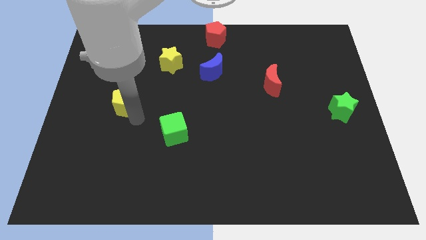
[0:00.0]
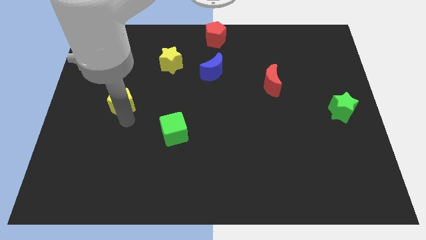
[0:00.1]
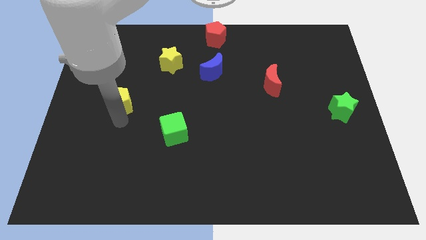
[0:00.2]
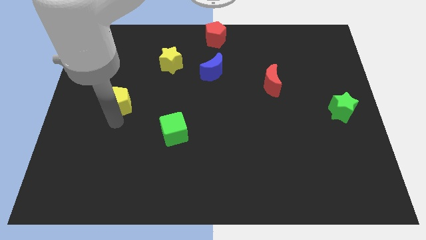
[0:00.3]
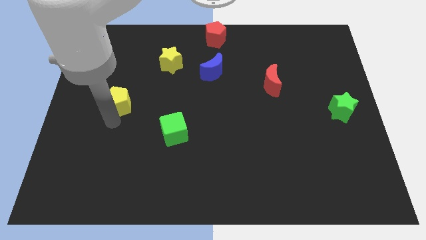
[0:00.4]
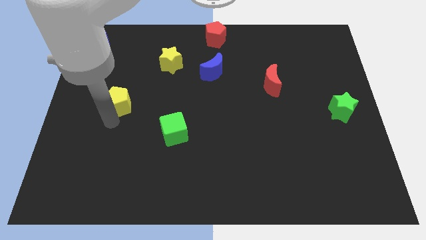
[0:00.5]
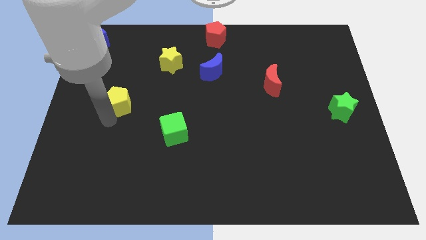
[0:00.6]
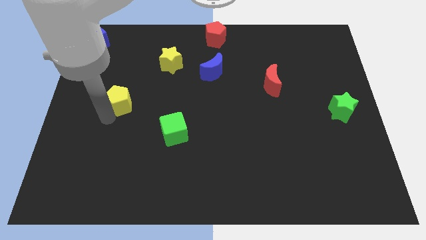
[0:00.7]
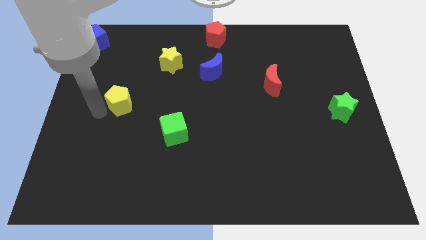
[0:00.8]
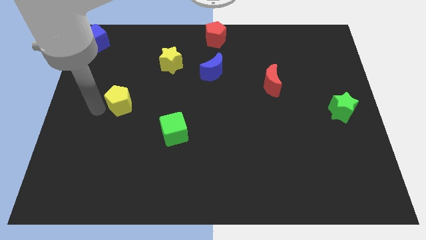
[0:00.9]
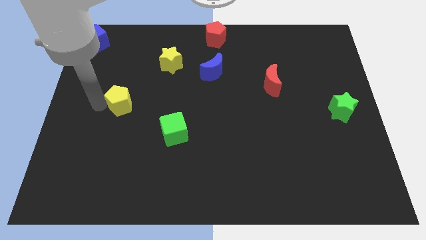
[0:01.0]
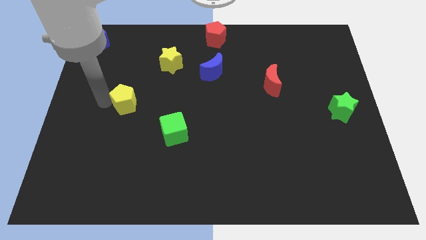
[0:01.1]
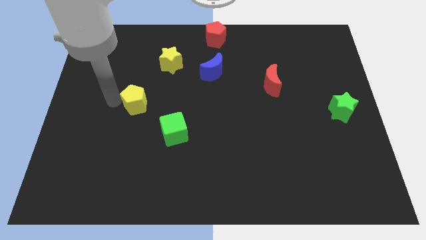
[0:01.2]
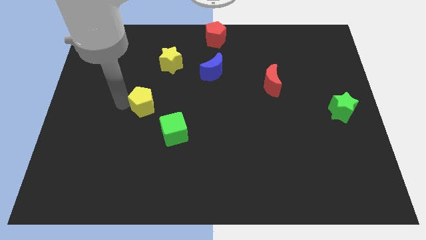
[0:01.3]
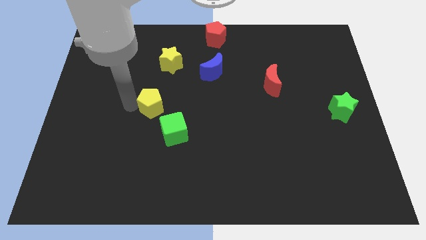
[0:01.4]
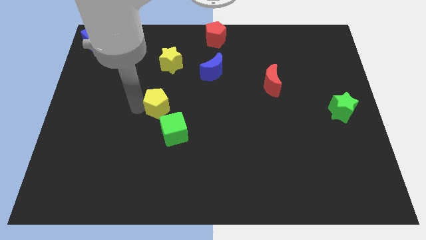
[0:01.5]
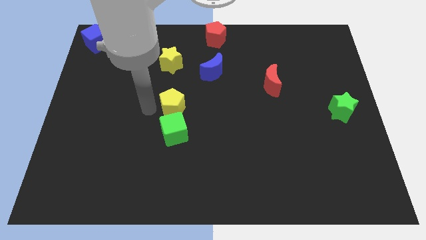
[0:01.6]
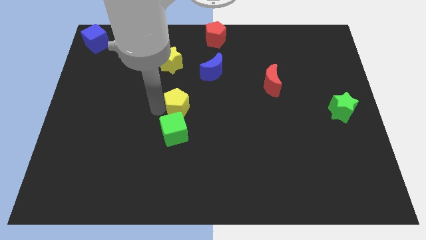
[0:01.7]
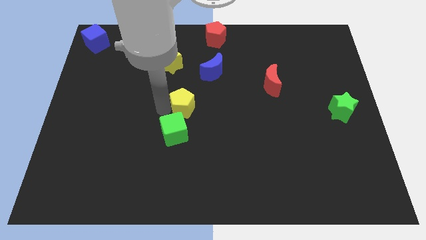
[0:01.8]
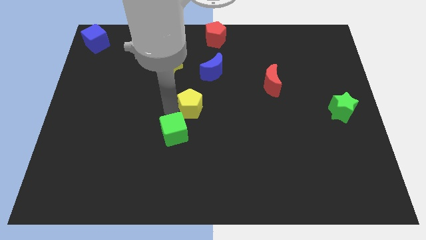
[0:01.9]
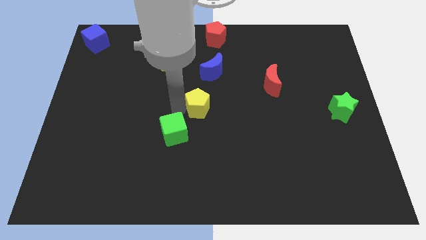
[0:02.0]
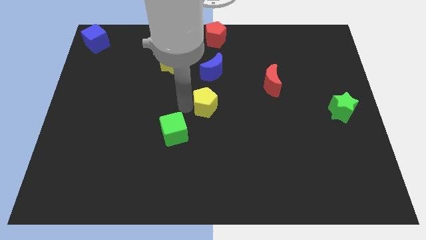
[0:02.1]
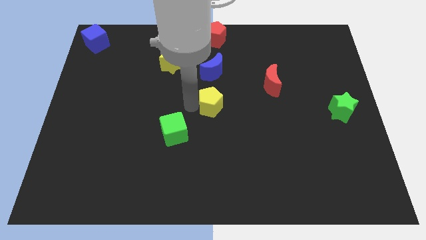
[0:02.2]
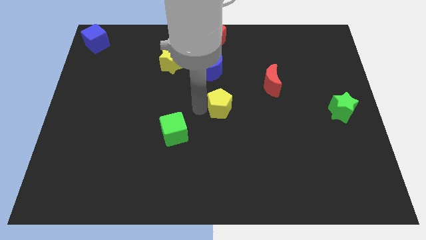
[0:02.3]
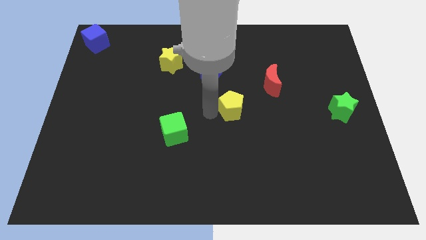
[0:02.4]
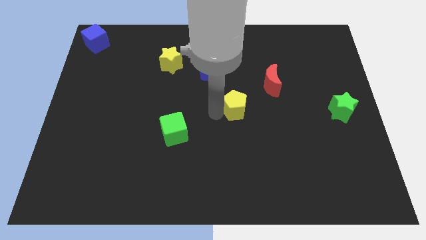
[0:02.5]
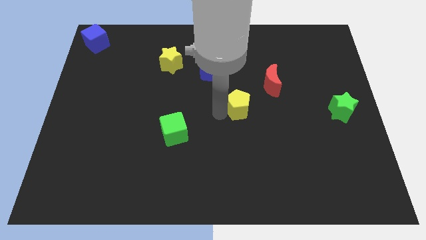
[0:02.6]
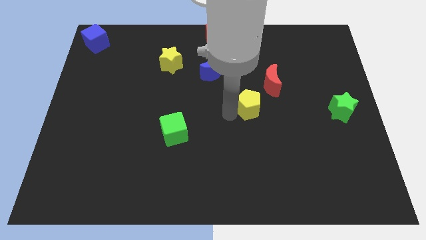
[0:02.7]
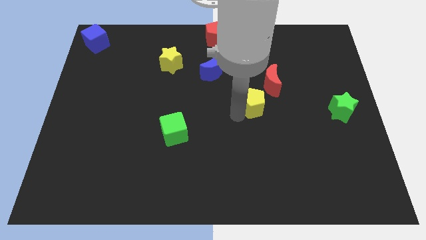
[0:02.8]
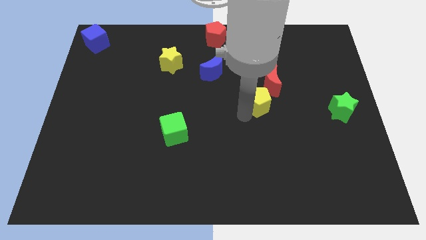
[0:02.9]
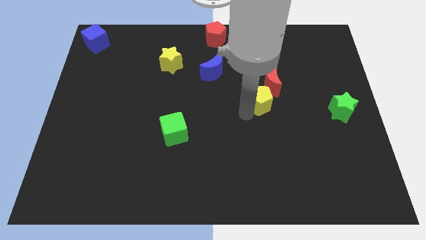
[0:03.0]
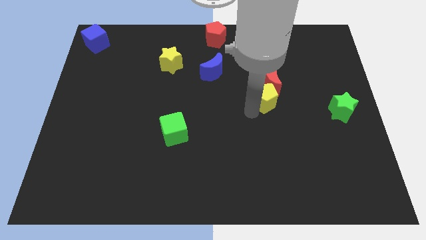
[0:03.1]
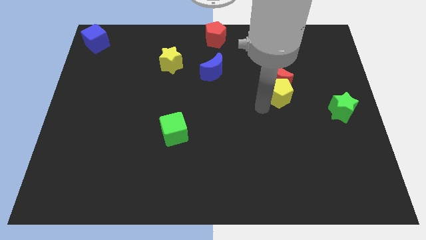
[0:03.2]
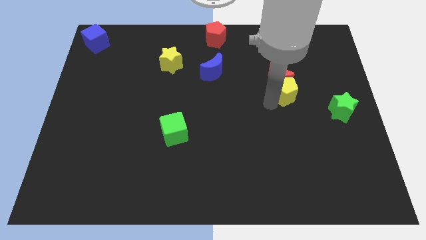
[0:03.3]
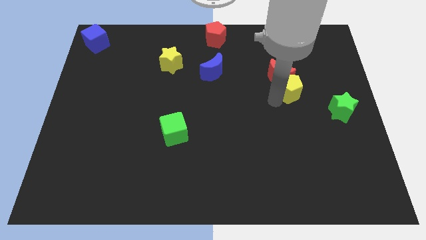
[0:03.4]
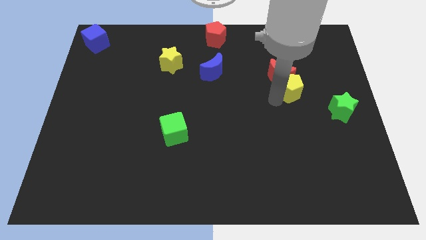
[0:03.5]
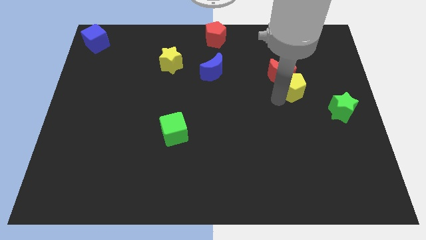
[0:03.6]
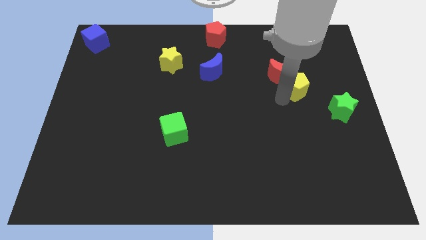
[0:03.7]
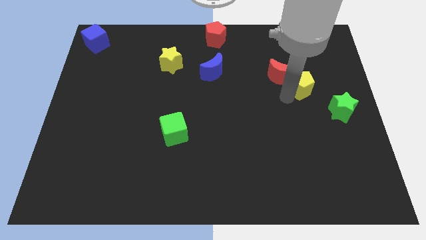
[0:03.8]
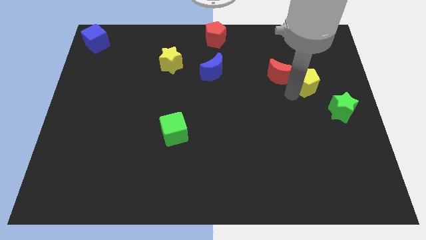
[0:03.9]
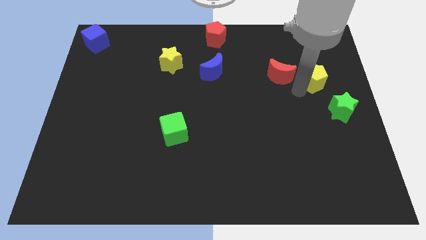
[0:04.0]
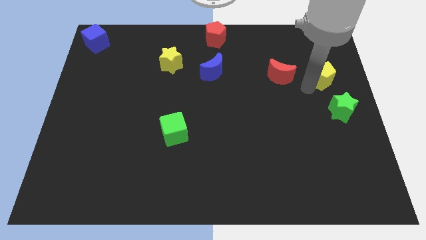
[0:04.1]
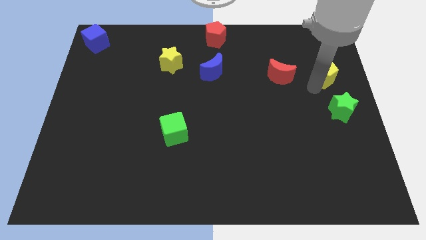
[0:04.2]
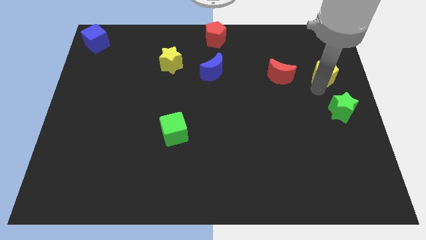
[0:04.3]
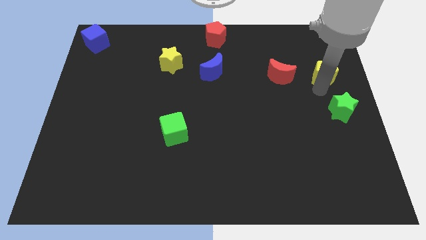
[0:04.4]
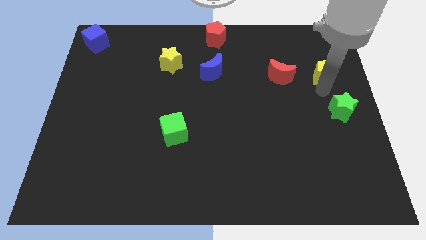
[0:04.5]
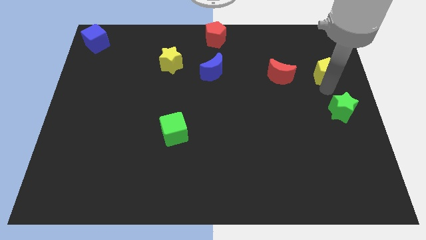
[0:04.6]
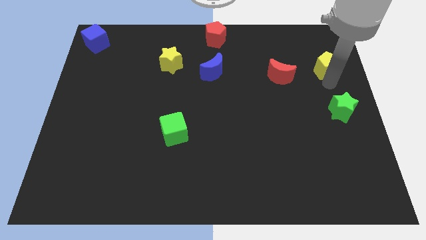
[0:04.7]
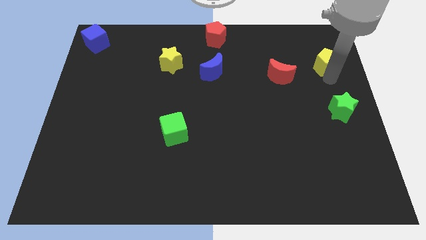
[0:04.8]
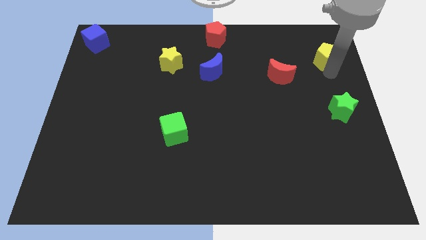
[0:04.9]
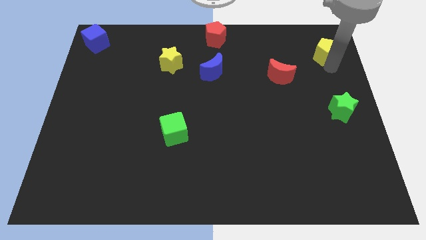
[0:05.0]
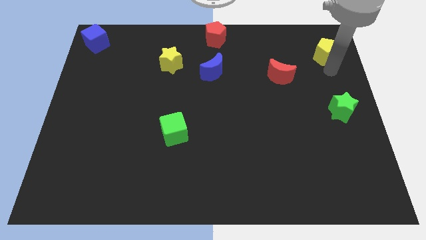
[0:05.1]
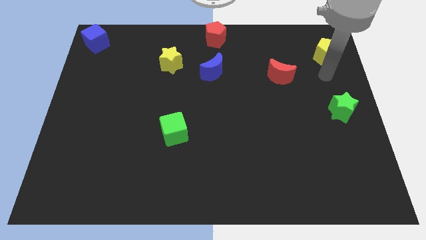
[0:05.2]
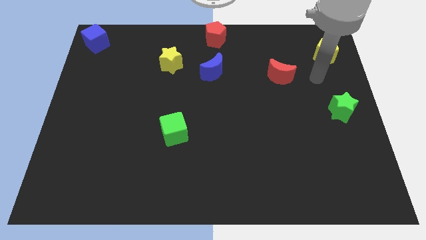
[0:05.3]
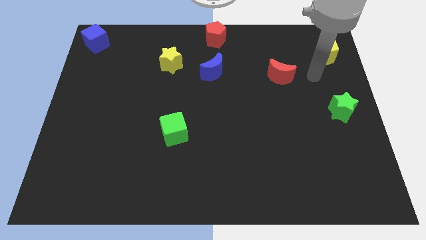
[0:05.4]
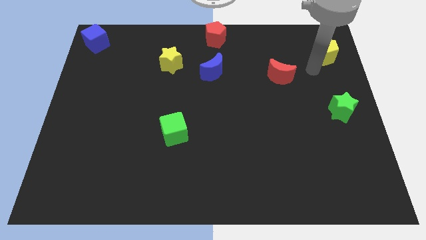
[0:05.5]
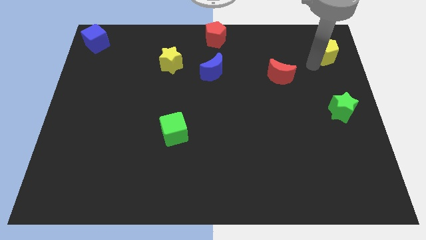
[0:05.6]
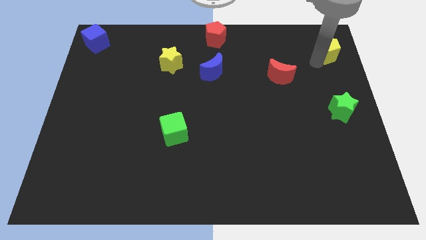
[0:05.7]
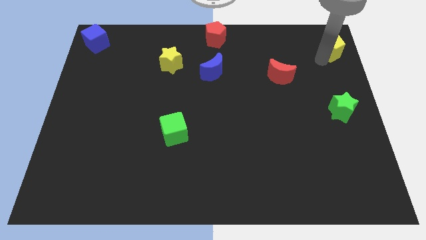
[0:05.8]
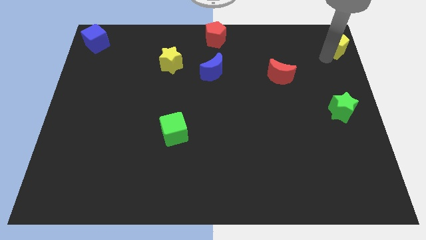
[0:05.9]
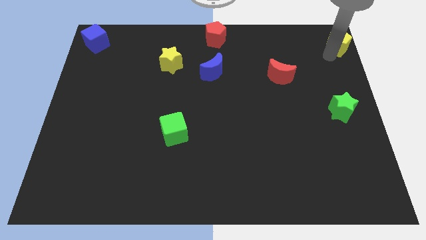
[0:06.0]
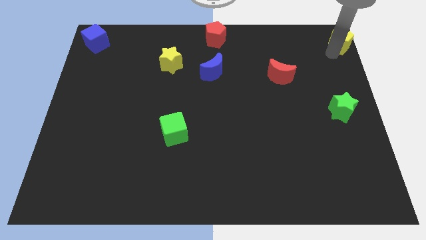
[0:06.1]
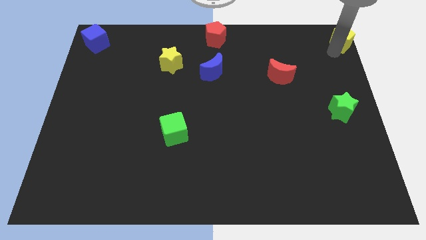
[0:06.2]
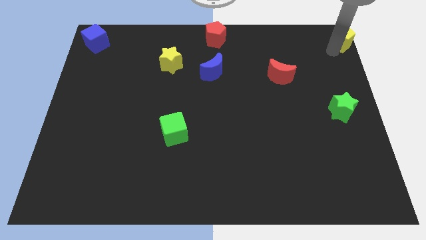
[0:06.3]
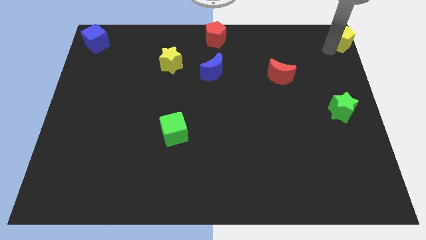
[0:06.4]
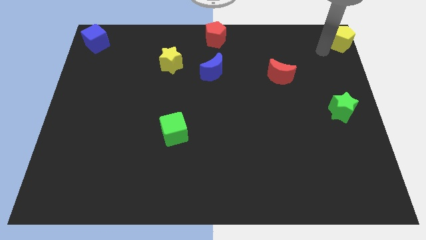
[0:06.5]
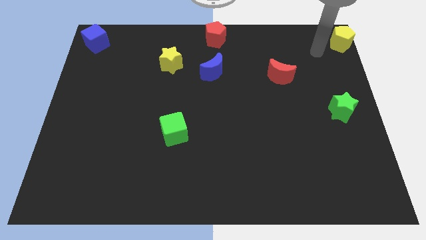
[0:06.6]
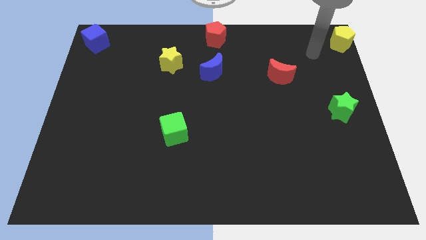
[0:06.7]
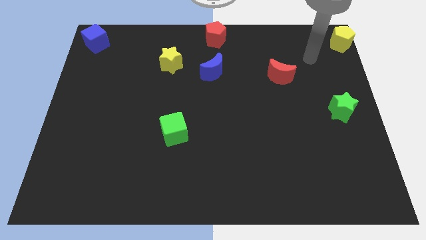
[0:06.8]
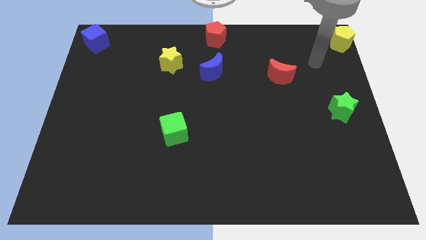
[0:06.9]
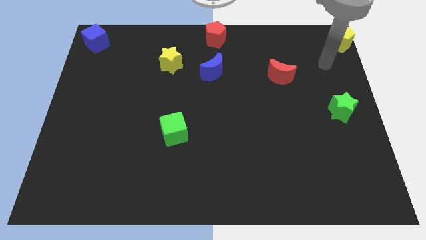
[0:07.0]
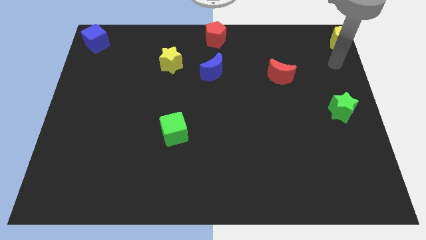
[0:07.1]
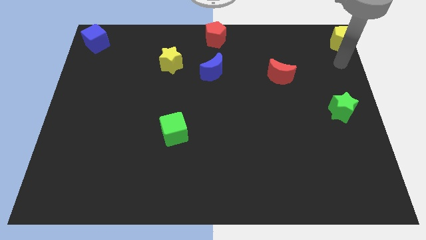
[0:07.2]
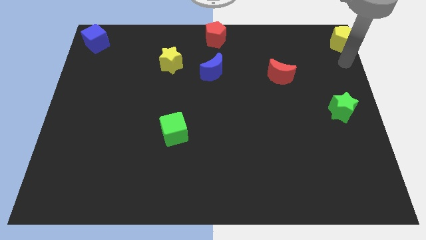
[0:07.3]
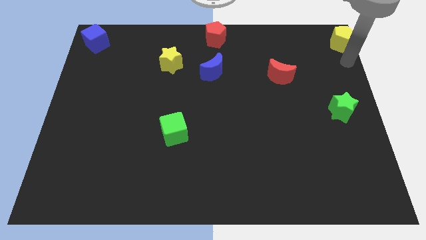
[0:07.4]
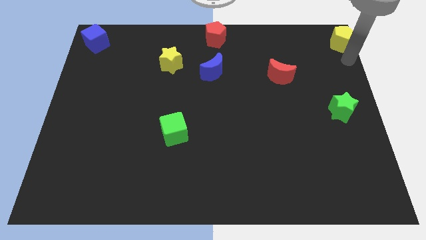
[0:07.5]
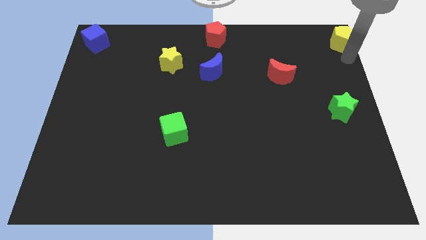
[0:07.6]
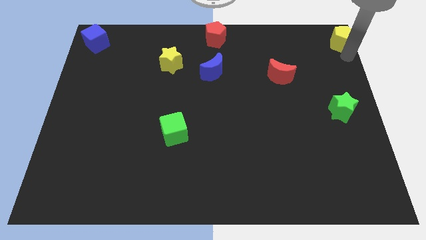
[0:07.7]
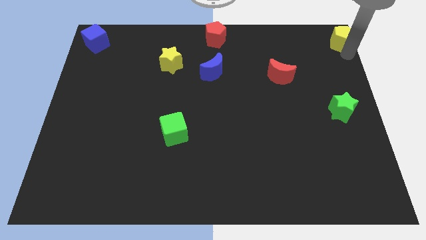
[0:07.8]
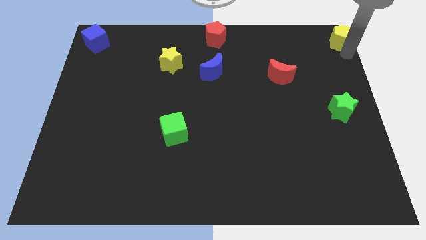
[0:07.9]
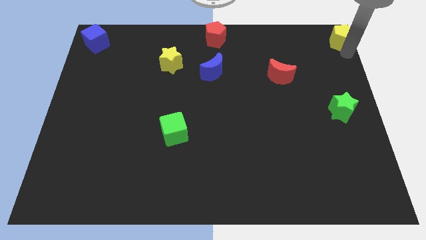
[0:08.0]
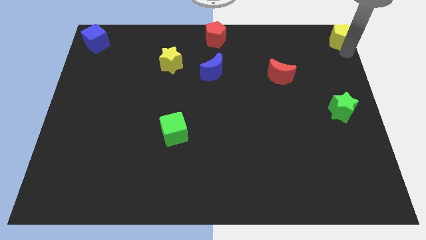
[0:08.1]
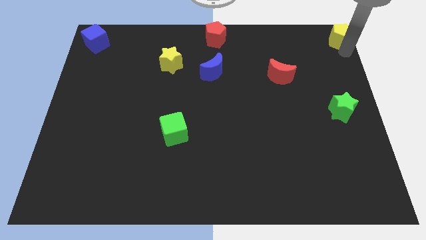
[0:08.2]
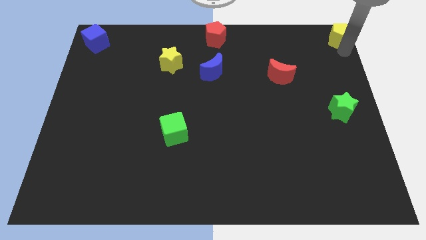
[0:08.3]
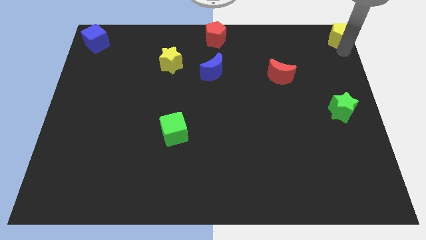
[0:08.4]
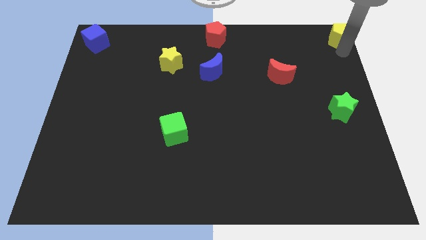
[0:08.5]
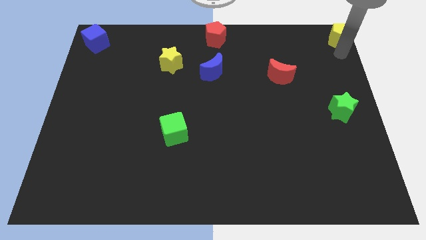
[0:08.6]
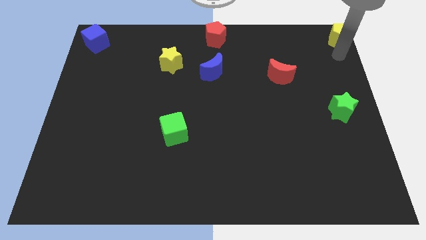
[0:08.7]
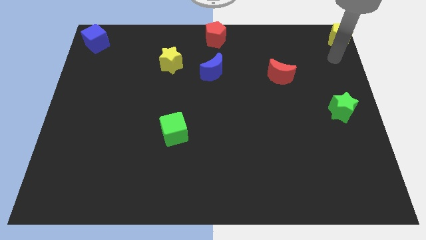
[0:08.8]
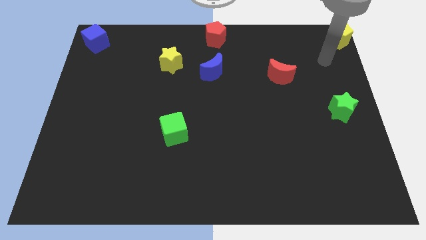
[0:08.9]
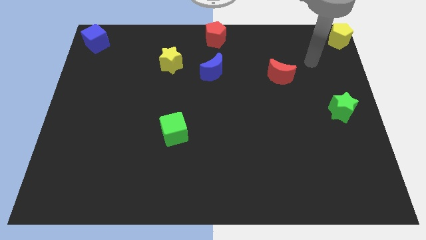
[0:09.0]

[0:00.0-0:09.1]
move yellow pentagon to top right corner of the board
